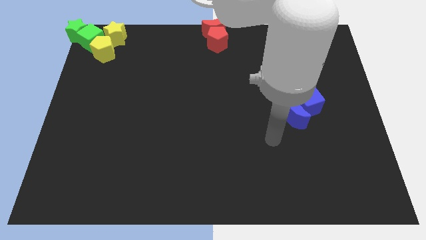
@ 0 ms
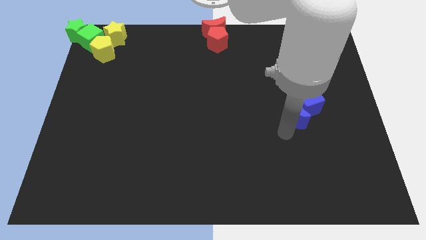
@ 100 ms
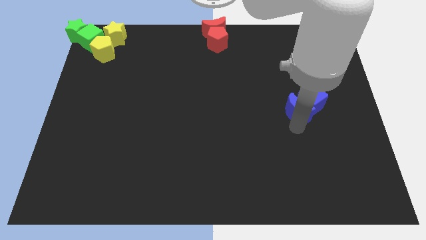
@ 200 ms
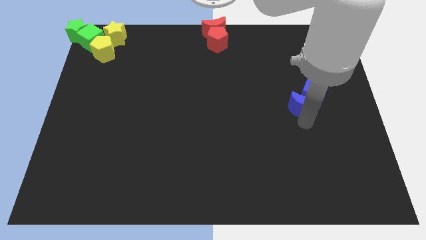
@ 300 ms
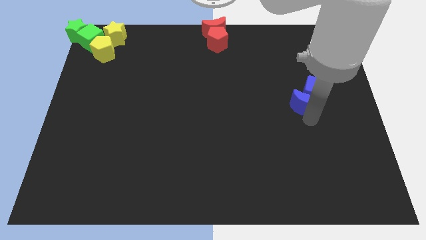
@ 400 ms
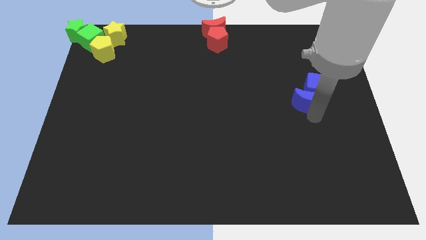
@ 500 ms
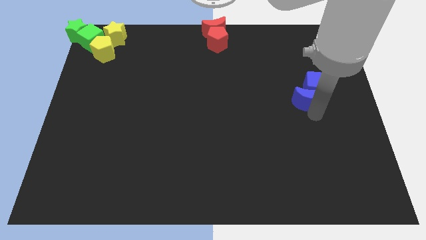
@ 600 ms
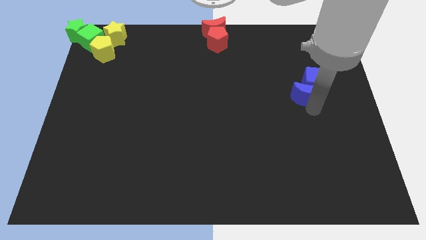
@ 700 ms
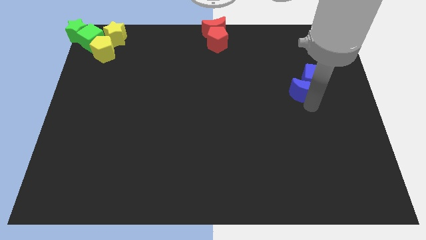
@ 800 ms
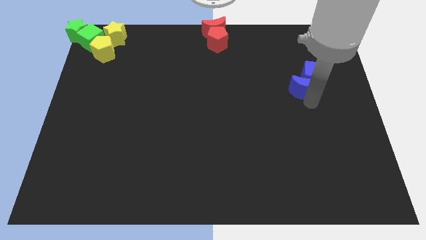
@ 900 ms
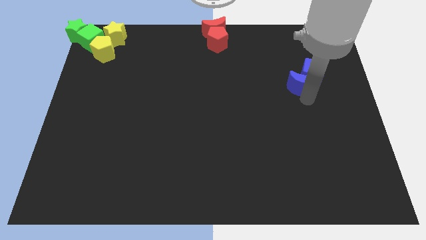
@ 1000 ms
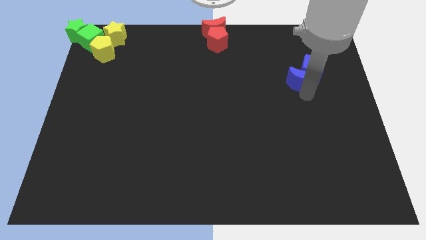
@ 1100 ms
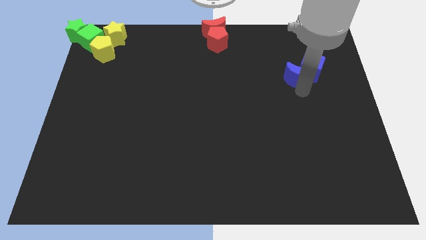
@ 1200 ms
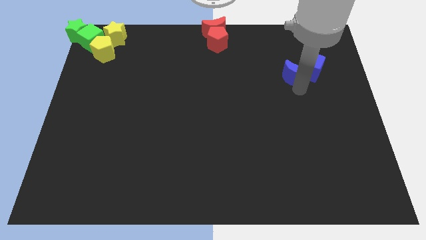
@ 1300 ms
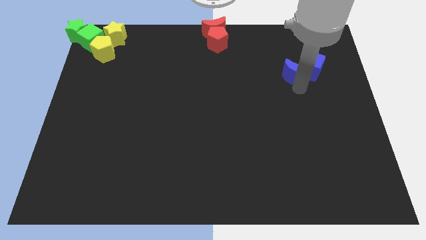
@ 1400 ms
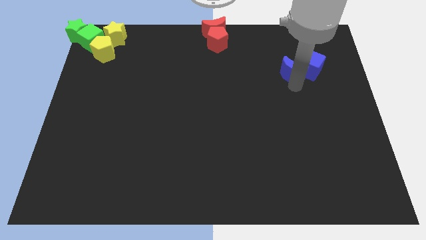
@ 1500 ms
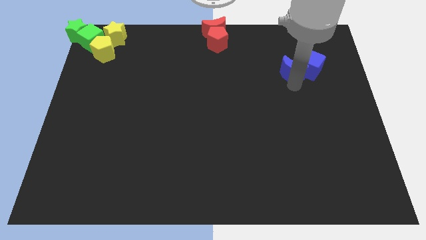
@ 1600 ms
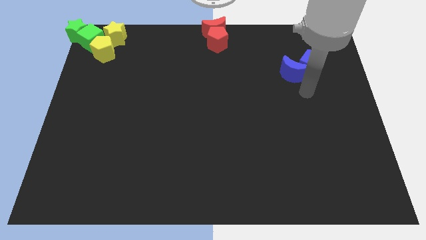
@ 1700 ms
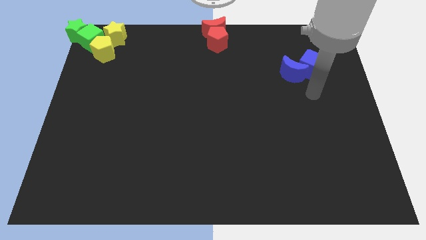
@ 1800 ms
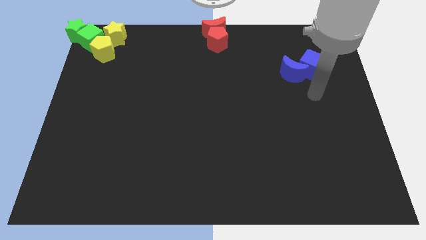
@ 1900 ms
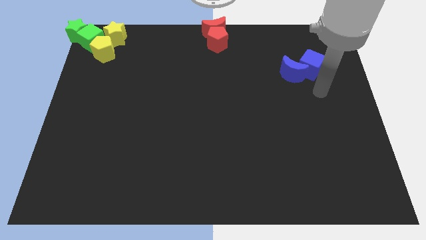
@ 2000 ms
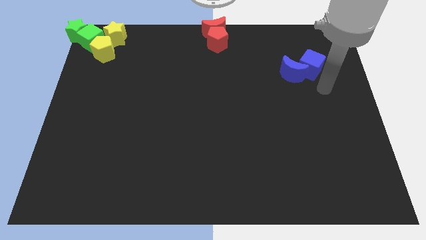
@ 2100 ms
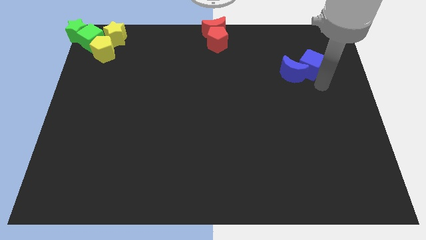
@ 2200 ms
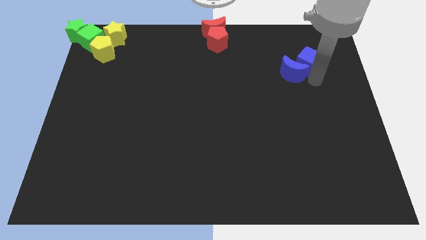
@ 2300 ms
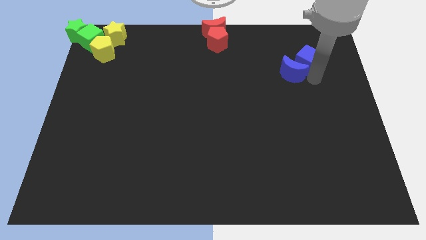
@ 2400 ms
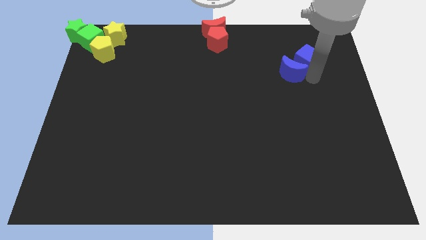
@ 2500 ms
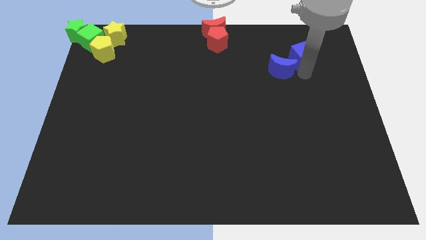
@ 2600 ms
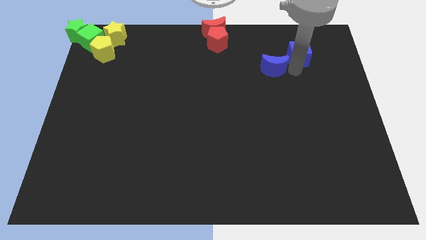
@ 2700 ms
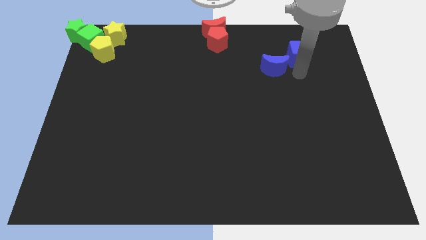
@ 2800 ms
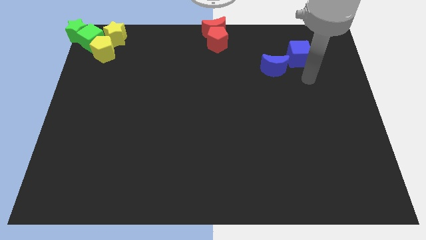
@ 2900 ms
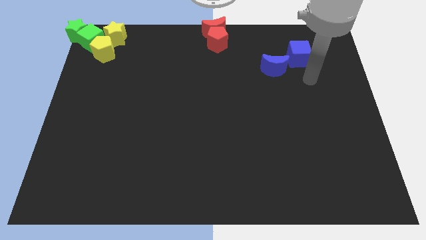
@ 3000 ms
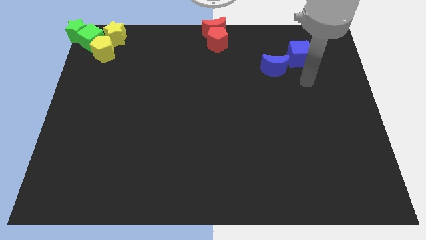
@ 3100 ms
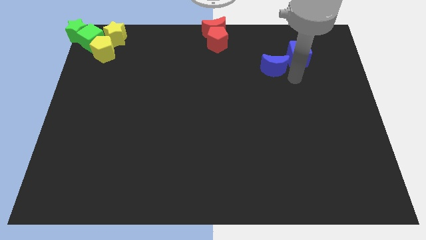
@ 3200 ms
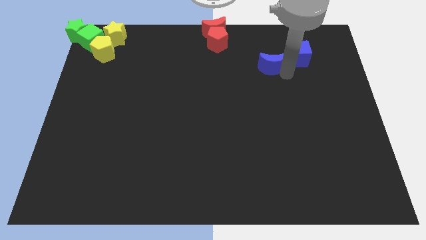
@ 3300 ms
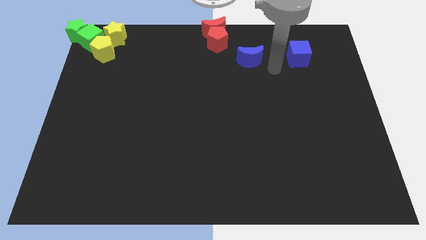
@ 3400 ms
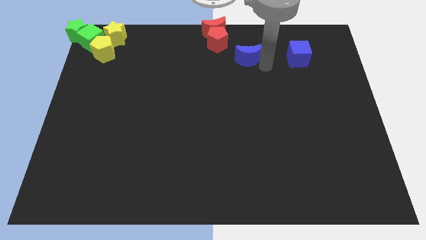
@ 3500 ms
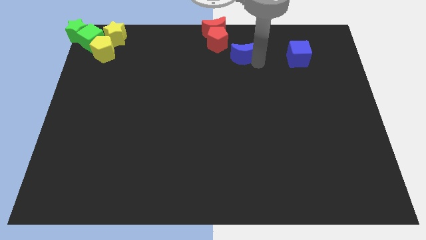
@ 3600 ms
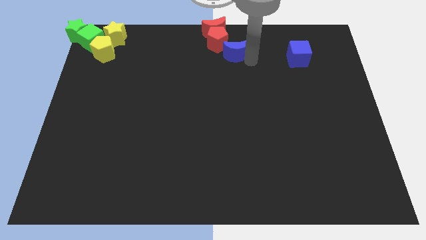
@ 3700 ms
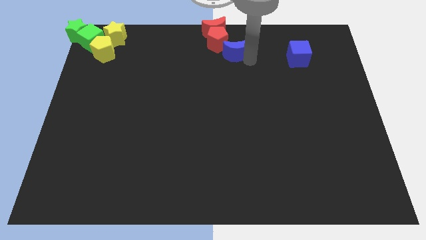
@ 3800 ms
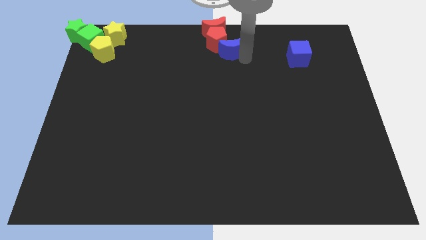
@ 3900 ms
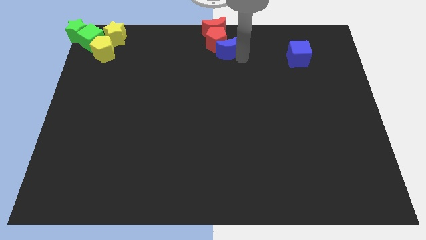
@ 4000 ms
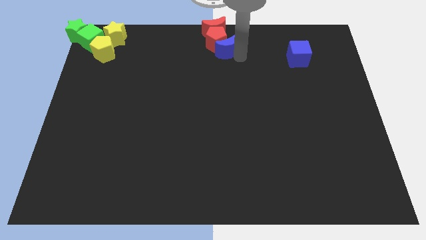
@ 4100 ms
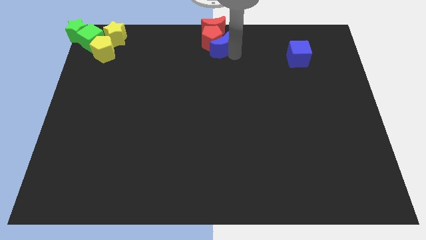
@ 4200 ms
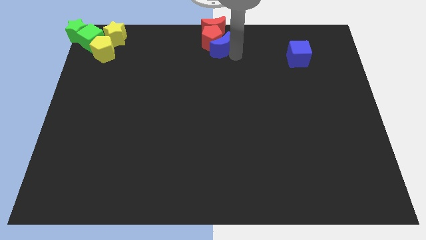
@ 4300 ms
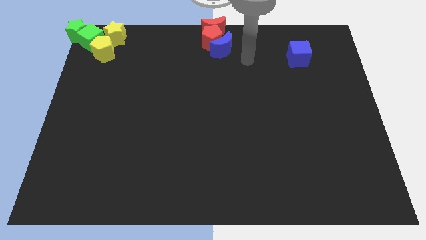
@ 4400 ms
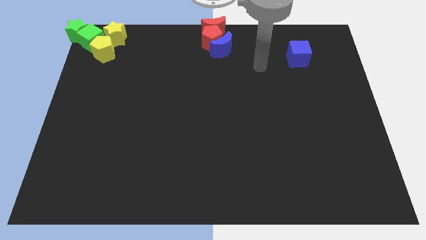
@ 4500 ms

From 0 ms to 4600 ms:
push the blue moon into red pentagon

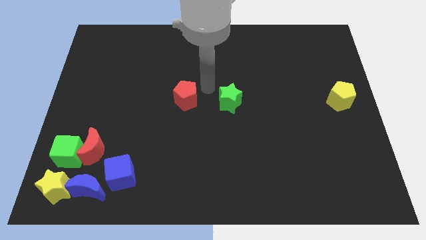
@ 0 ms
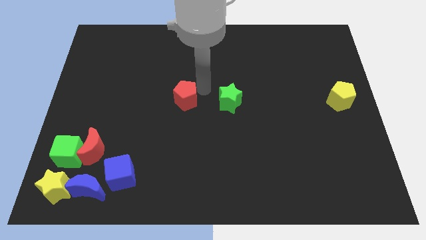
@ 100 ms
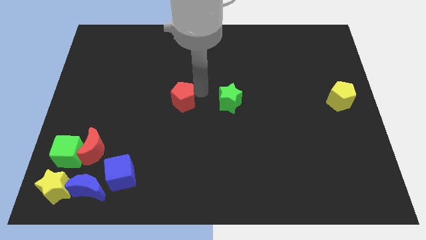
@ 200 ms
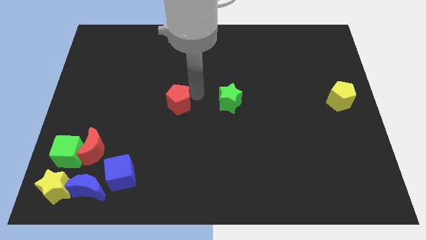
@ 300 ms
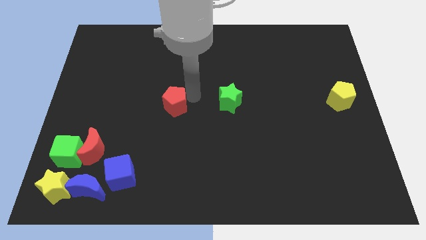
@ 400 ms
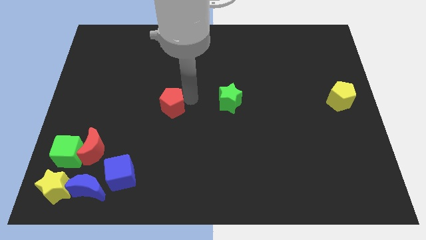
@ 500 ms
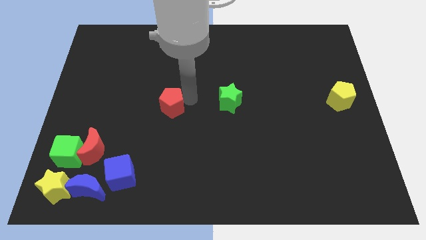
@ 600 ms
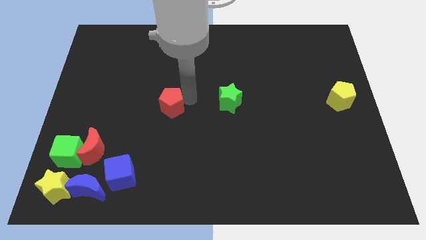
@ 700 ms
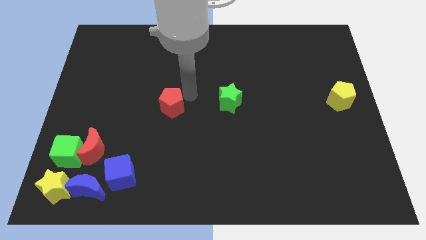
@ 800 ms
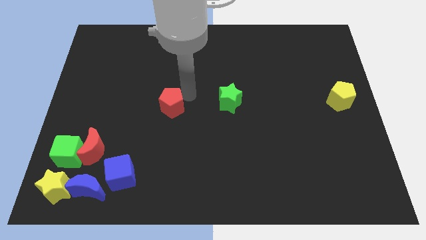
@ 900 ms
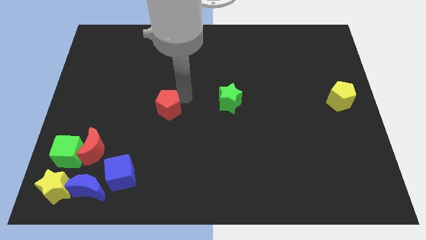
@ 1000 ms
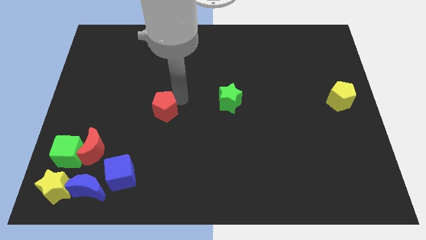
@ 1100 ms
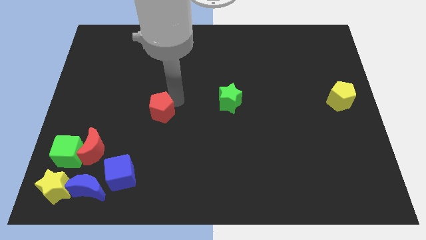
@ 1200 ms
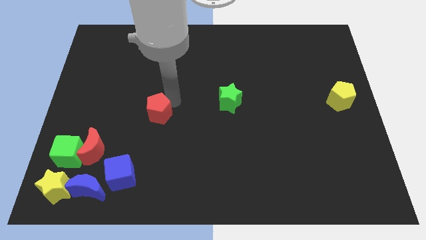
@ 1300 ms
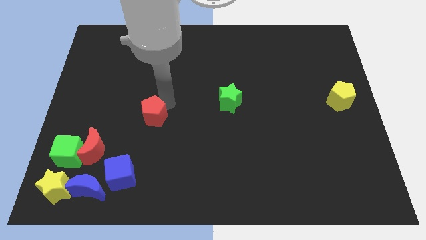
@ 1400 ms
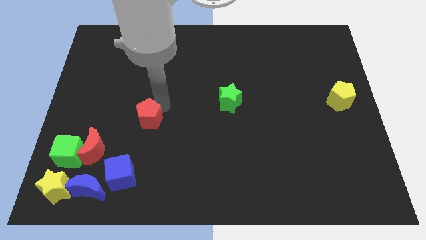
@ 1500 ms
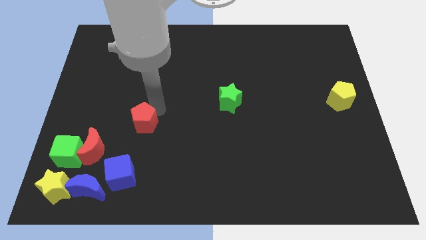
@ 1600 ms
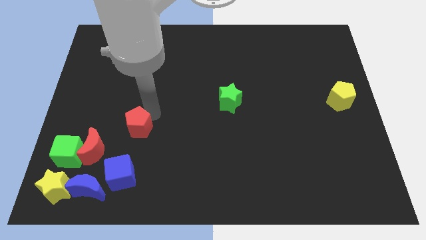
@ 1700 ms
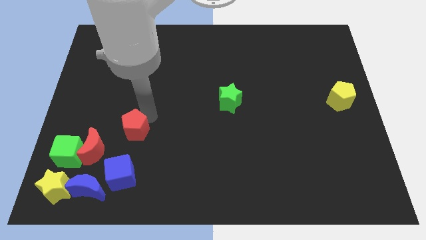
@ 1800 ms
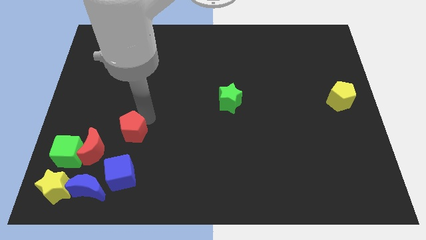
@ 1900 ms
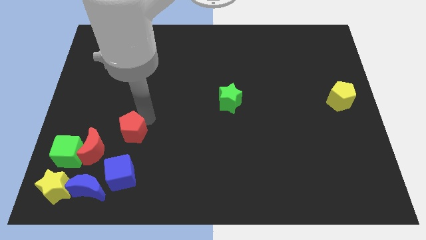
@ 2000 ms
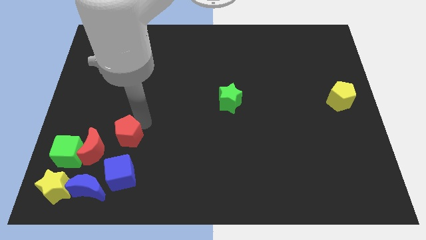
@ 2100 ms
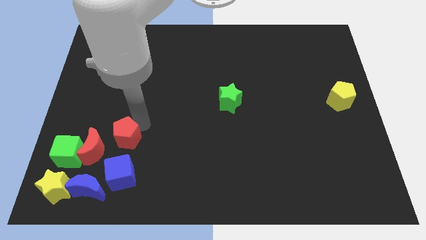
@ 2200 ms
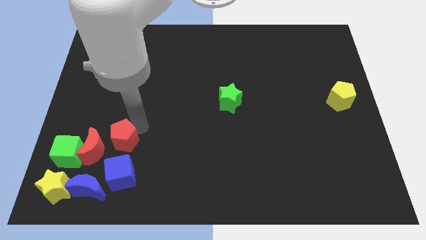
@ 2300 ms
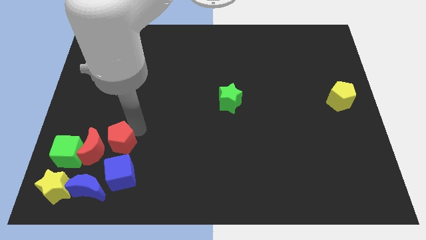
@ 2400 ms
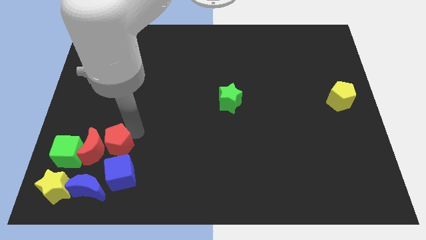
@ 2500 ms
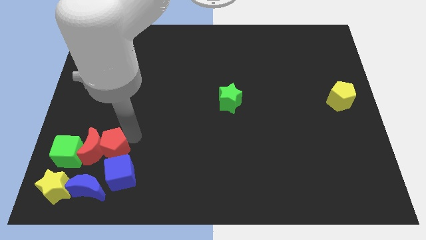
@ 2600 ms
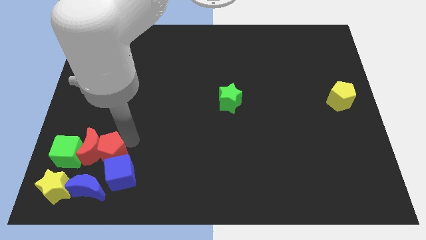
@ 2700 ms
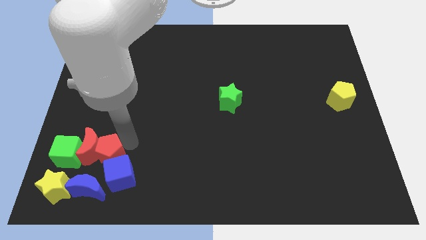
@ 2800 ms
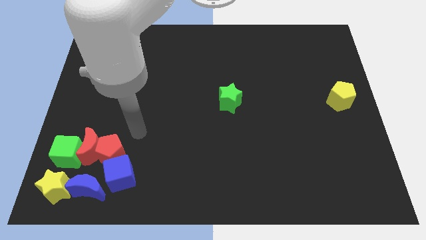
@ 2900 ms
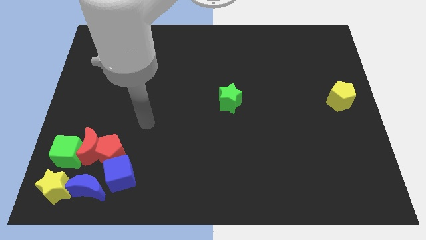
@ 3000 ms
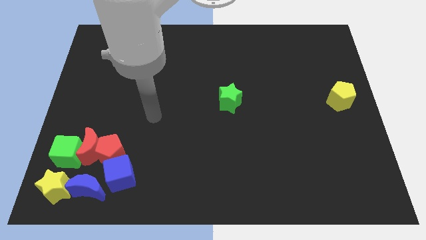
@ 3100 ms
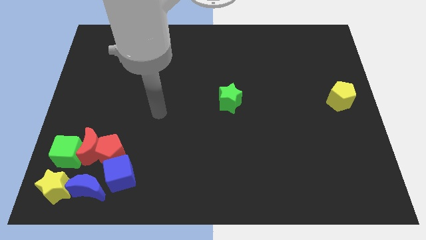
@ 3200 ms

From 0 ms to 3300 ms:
put the red pentagon on the right side of the red crescent

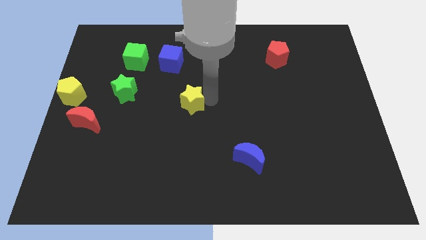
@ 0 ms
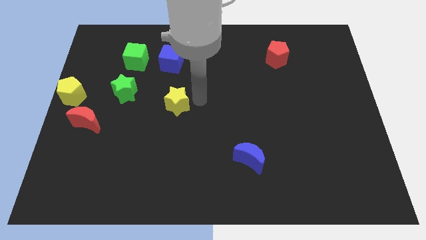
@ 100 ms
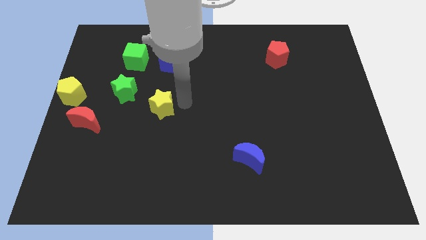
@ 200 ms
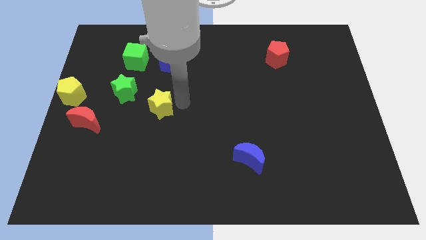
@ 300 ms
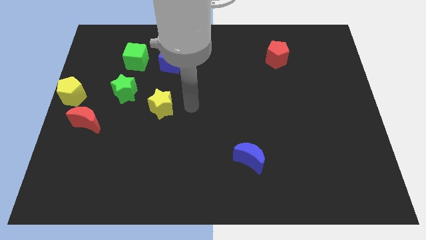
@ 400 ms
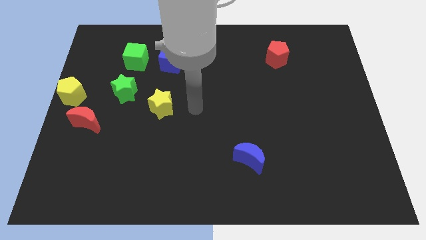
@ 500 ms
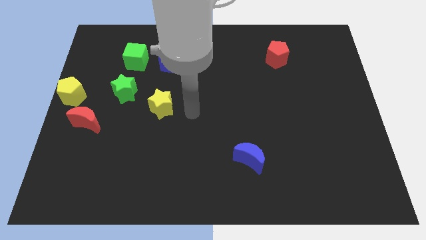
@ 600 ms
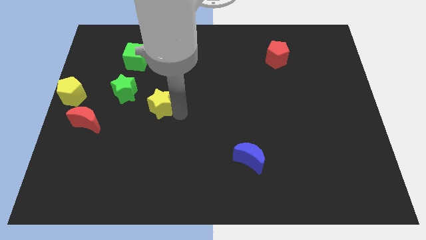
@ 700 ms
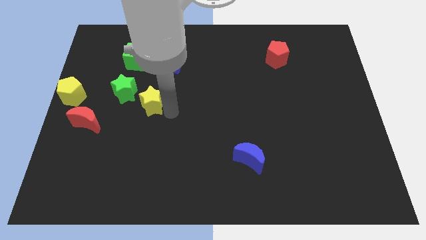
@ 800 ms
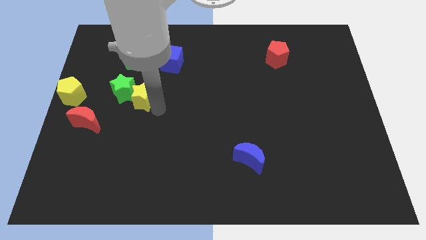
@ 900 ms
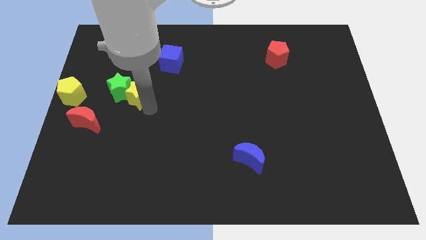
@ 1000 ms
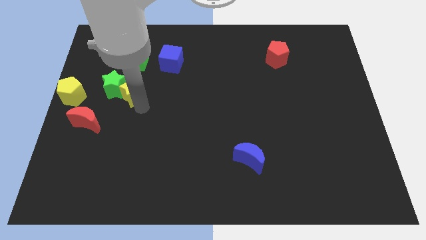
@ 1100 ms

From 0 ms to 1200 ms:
move the yellow star to the right of the green star
